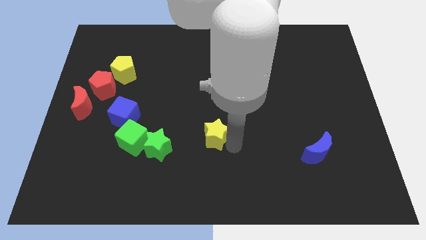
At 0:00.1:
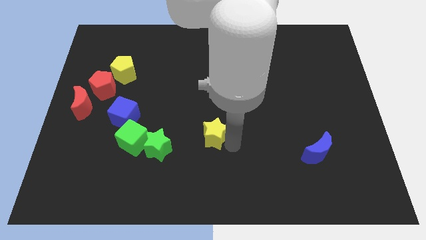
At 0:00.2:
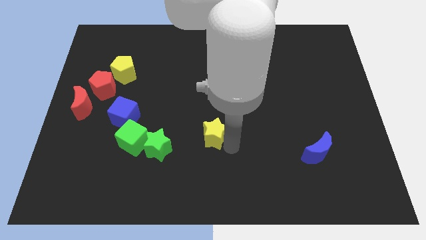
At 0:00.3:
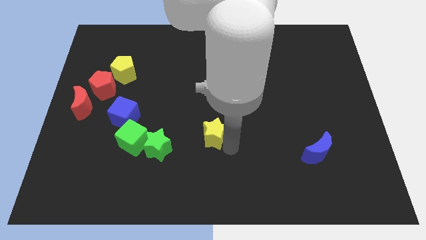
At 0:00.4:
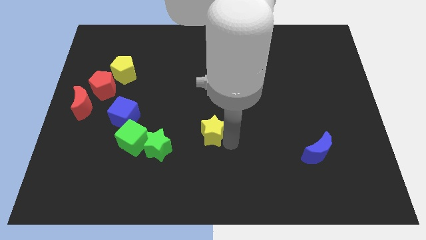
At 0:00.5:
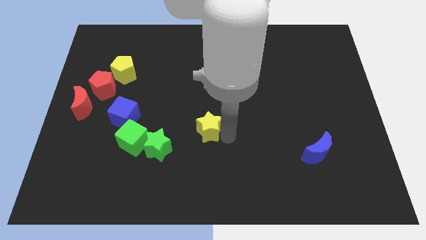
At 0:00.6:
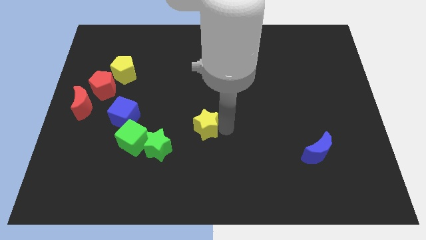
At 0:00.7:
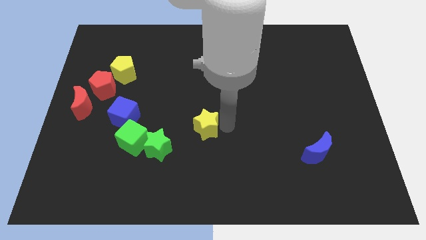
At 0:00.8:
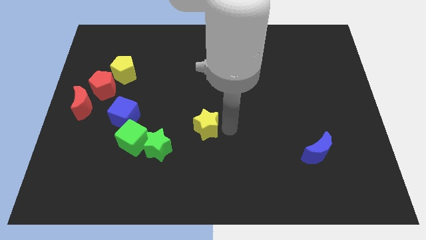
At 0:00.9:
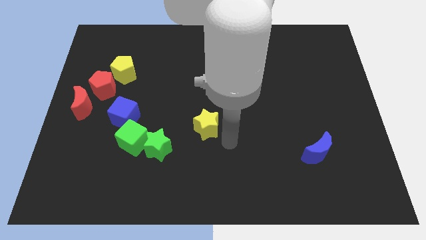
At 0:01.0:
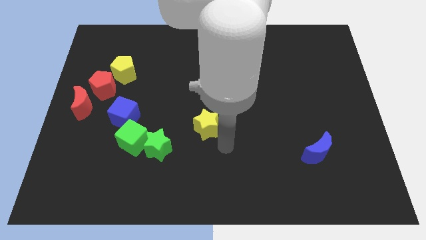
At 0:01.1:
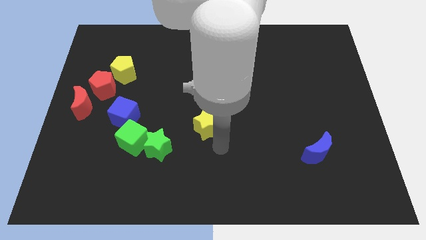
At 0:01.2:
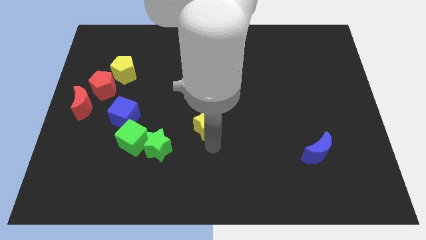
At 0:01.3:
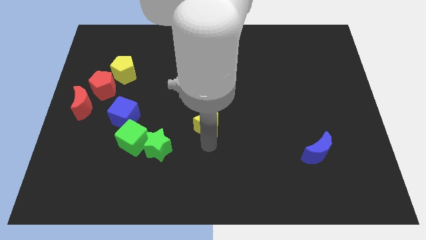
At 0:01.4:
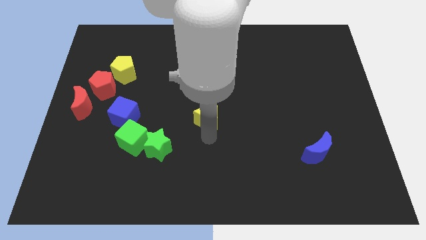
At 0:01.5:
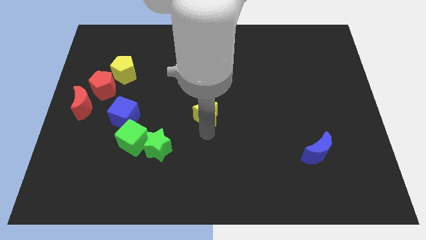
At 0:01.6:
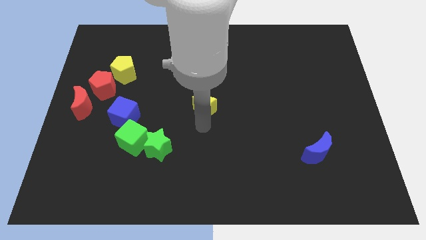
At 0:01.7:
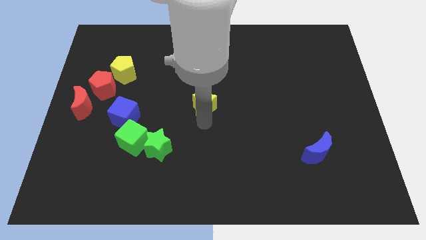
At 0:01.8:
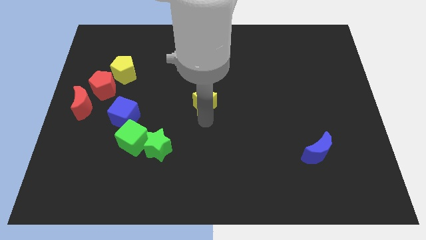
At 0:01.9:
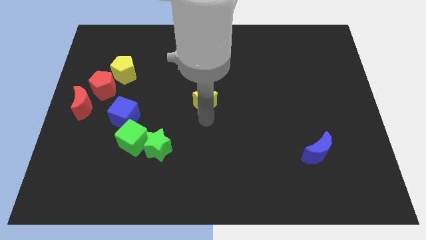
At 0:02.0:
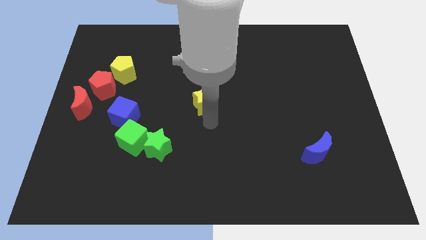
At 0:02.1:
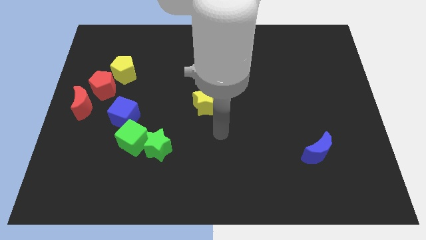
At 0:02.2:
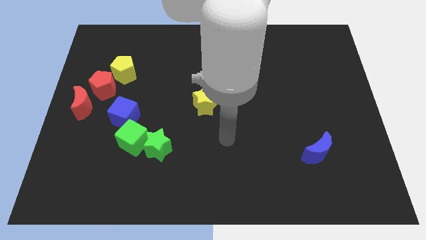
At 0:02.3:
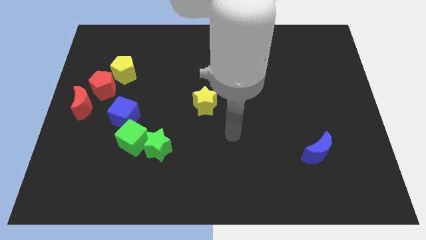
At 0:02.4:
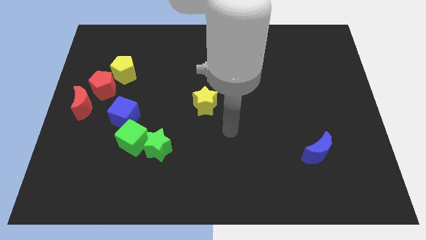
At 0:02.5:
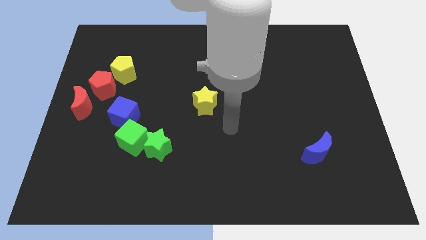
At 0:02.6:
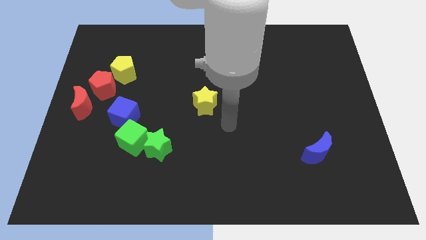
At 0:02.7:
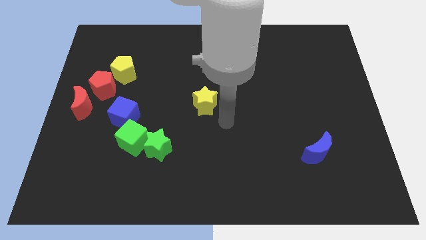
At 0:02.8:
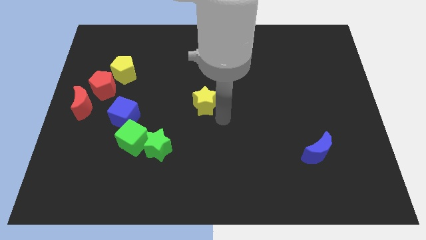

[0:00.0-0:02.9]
place the yellow star above the green star

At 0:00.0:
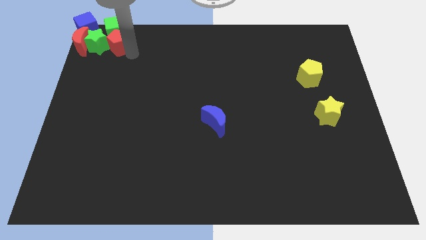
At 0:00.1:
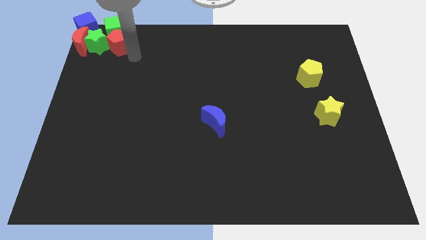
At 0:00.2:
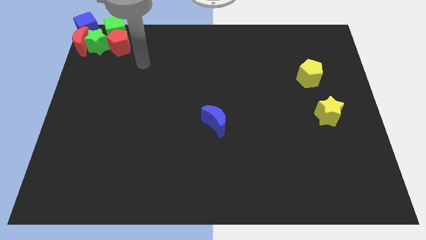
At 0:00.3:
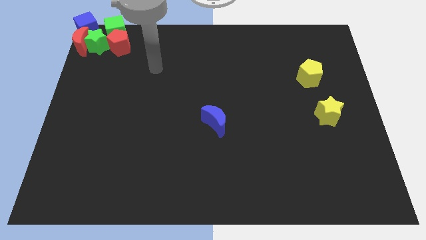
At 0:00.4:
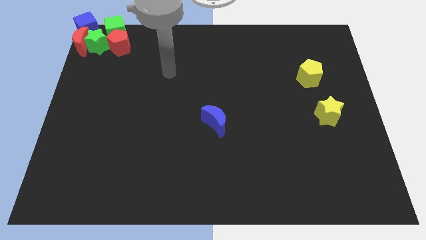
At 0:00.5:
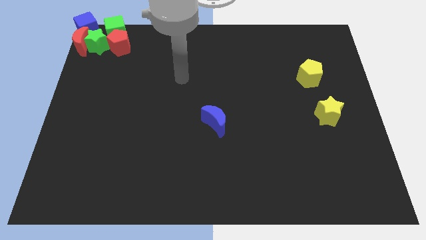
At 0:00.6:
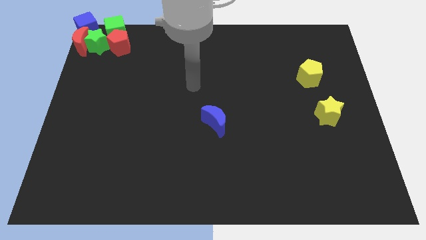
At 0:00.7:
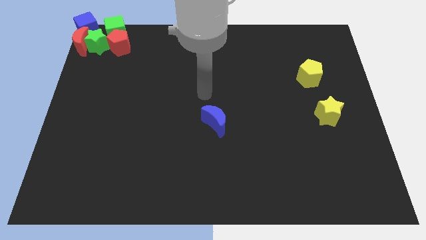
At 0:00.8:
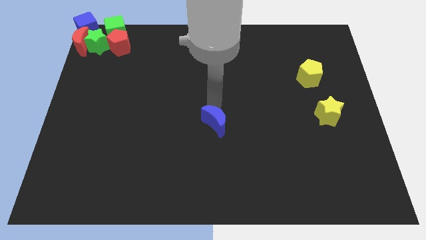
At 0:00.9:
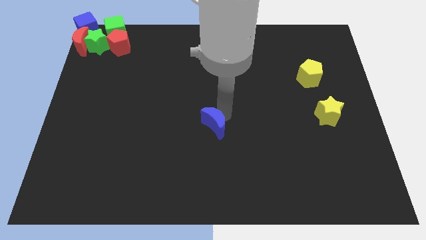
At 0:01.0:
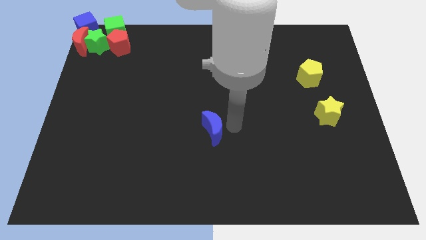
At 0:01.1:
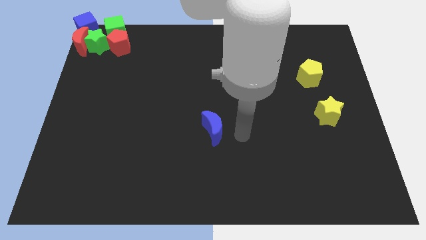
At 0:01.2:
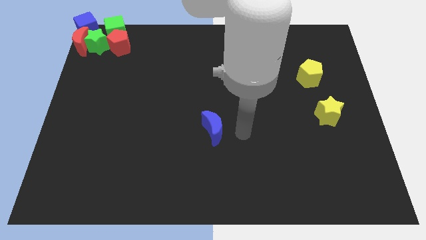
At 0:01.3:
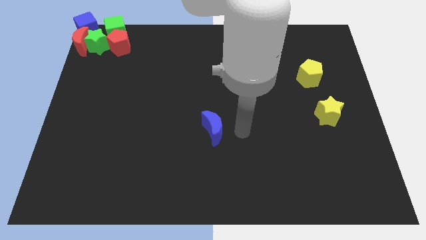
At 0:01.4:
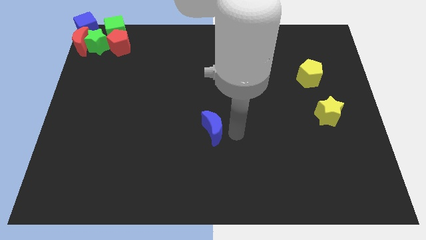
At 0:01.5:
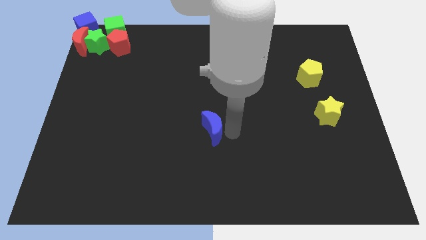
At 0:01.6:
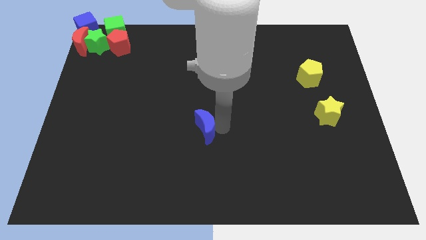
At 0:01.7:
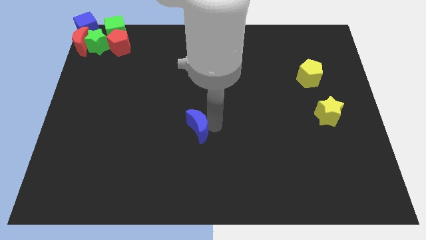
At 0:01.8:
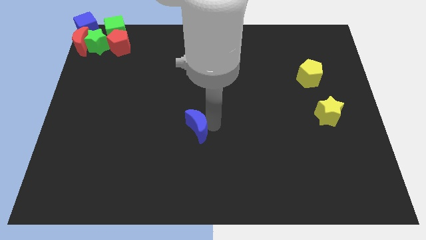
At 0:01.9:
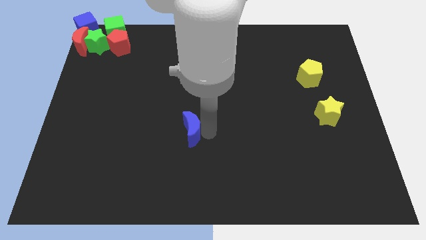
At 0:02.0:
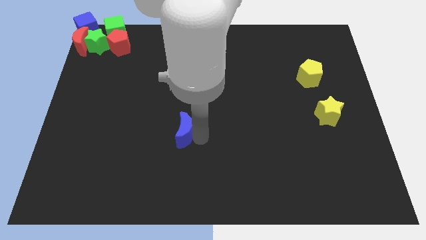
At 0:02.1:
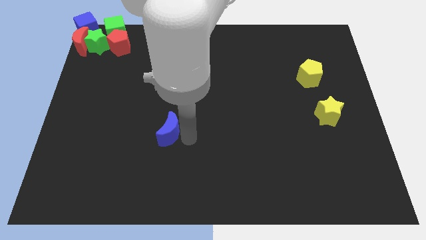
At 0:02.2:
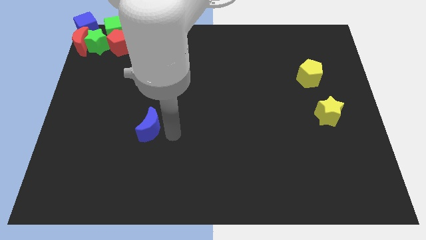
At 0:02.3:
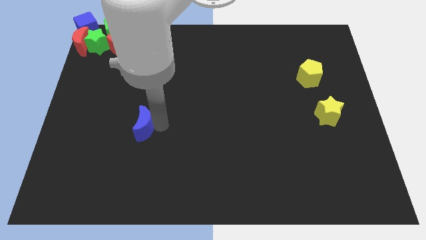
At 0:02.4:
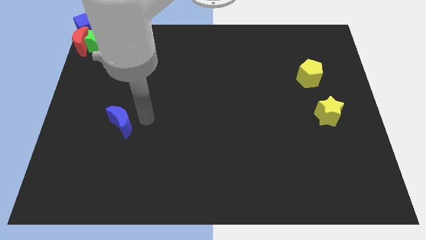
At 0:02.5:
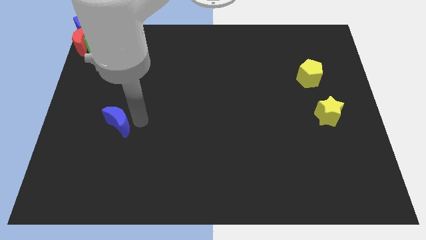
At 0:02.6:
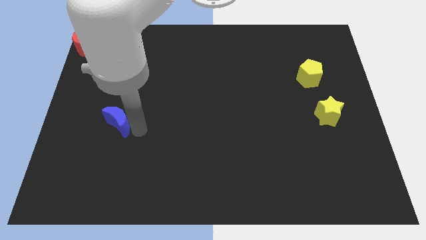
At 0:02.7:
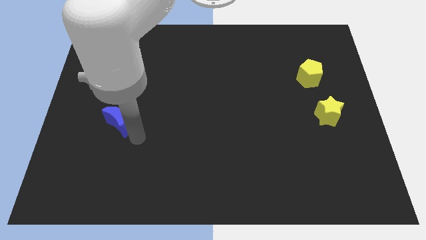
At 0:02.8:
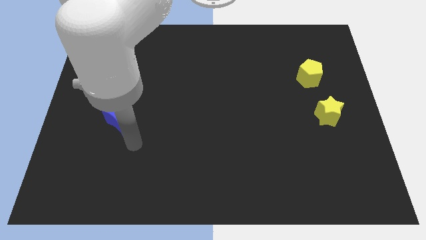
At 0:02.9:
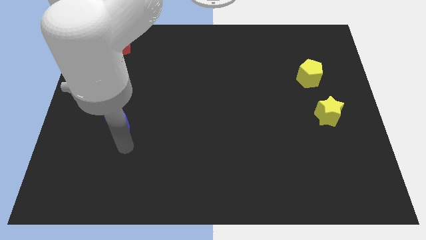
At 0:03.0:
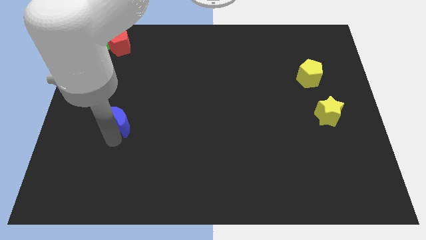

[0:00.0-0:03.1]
move the blue crescent to the left side of the table

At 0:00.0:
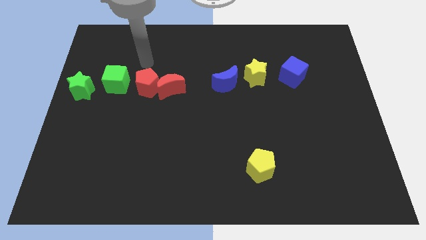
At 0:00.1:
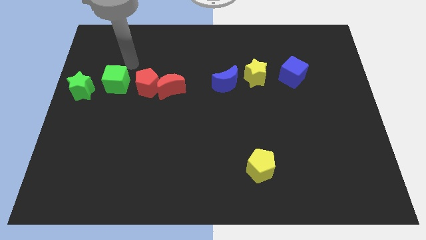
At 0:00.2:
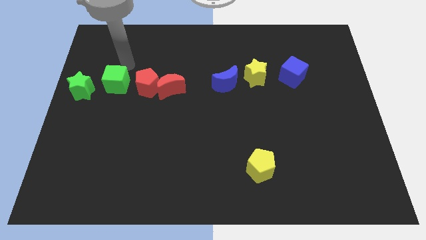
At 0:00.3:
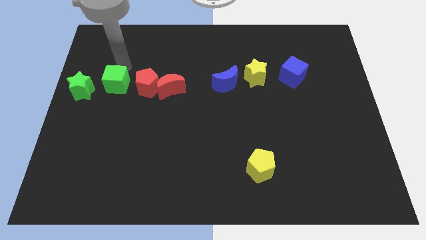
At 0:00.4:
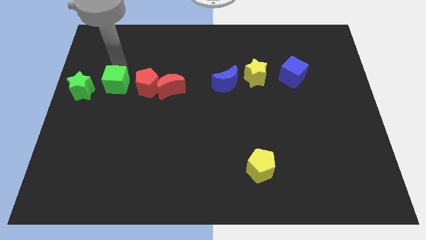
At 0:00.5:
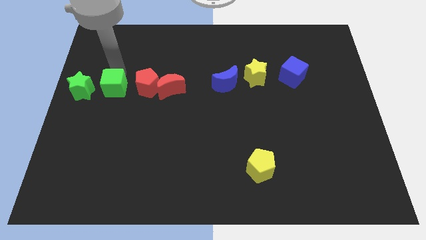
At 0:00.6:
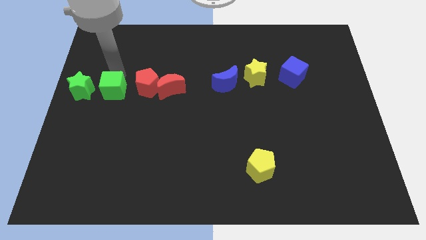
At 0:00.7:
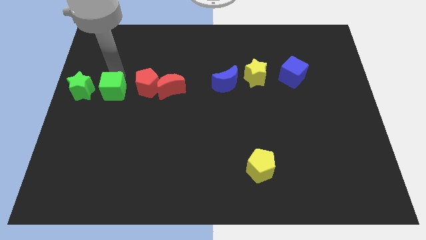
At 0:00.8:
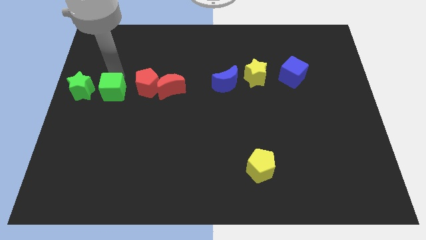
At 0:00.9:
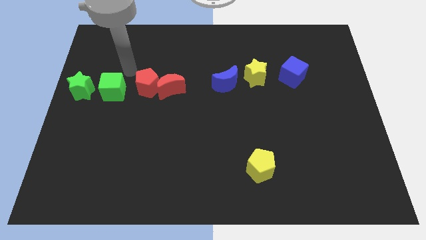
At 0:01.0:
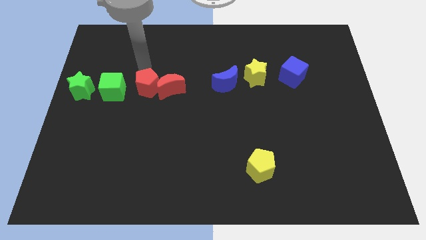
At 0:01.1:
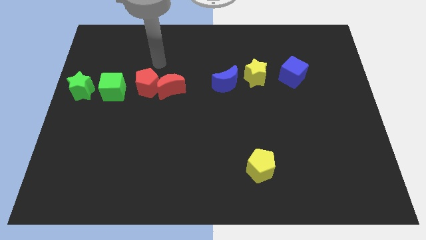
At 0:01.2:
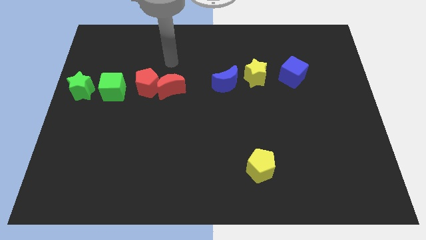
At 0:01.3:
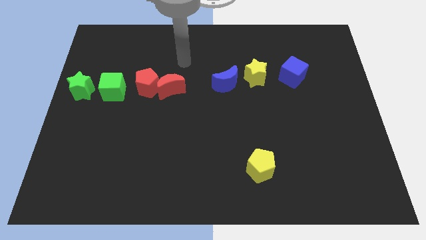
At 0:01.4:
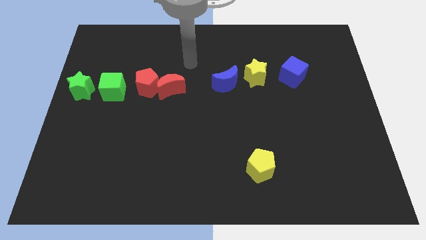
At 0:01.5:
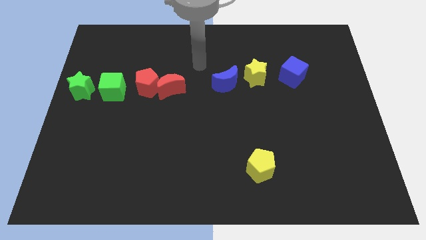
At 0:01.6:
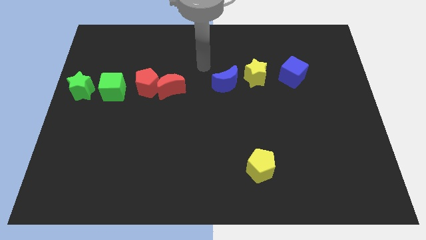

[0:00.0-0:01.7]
move the green cube downwards slightly

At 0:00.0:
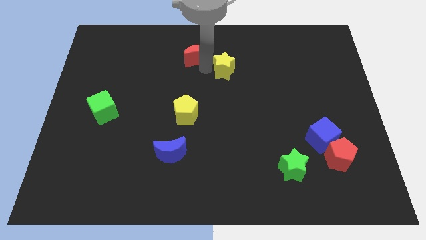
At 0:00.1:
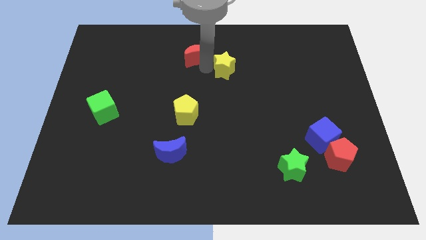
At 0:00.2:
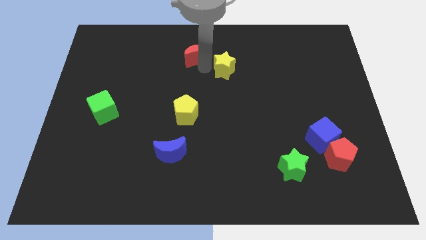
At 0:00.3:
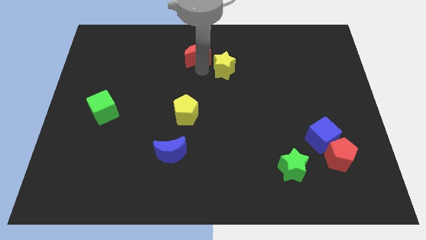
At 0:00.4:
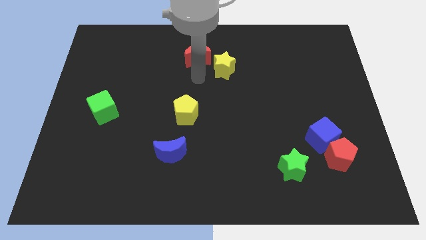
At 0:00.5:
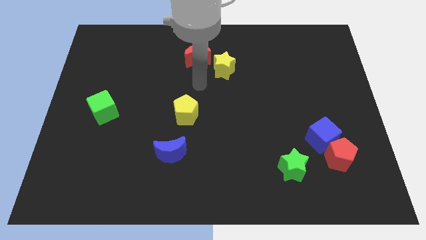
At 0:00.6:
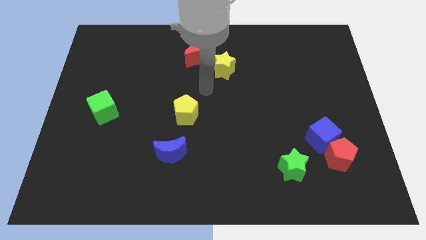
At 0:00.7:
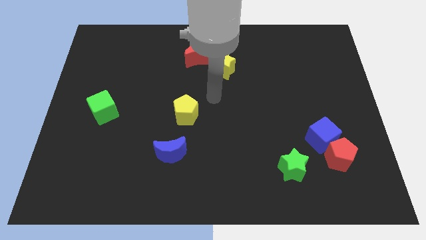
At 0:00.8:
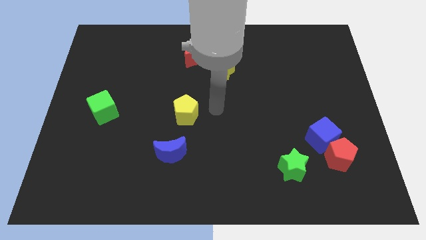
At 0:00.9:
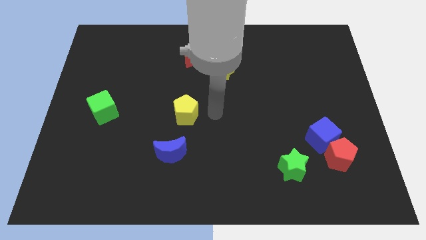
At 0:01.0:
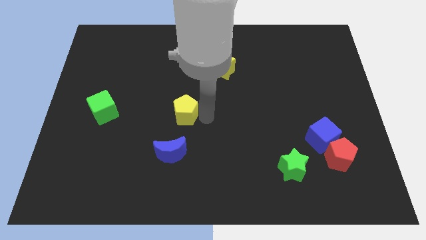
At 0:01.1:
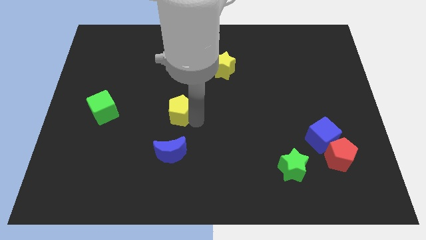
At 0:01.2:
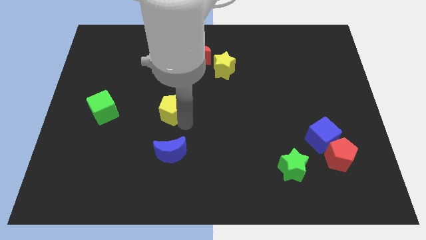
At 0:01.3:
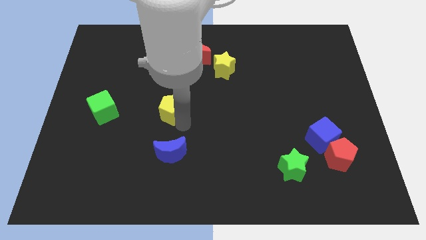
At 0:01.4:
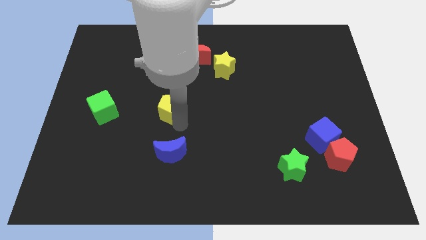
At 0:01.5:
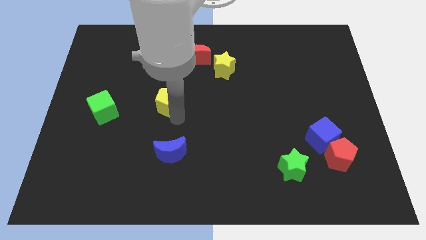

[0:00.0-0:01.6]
place the yellow pentagon vertically above the blue crescent
